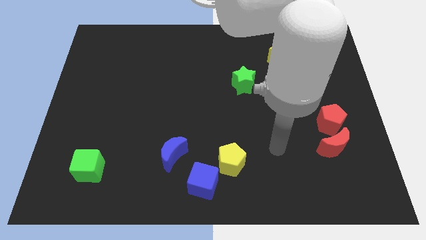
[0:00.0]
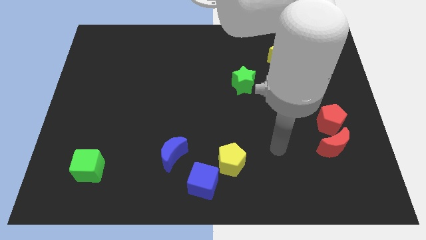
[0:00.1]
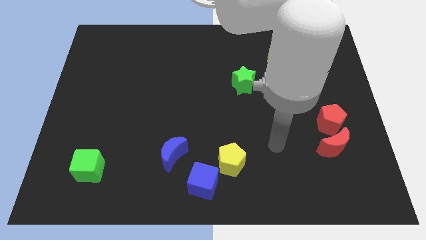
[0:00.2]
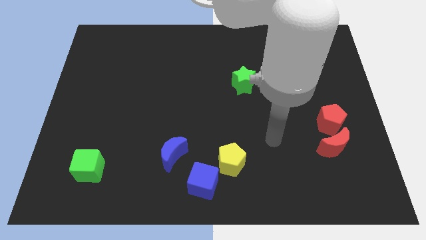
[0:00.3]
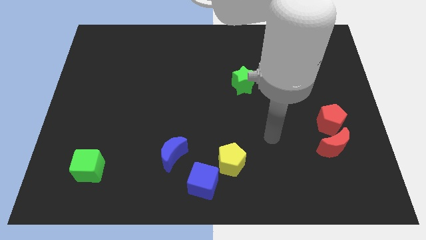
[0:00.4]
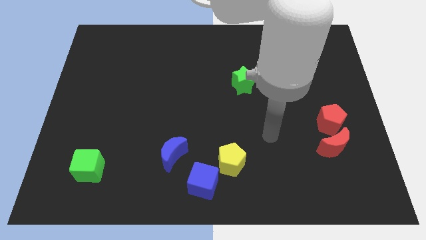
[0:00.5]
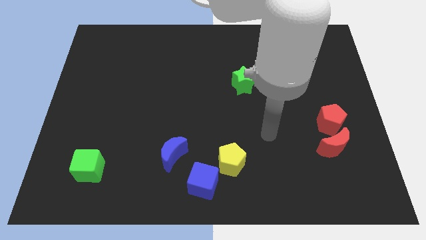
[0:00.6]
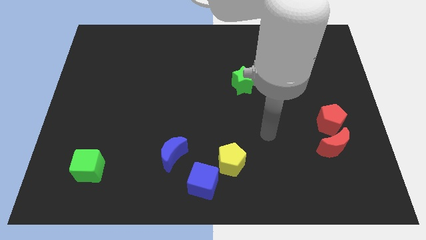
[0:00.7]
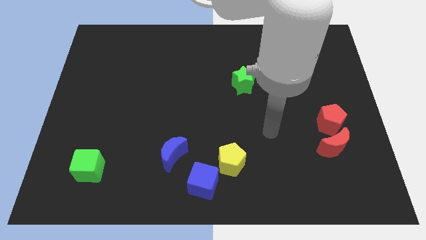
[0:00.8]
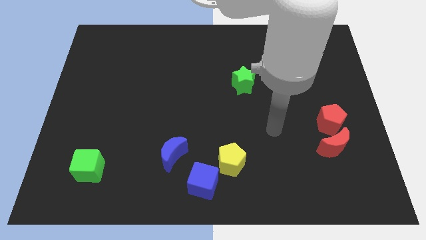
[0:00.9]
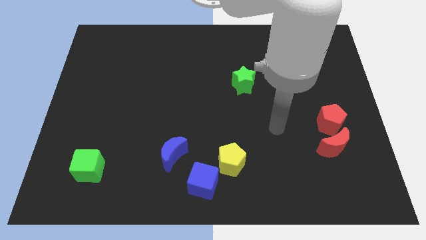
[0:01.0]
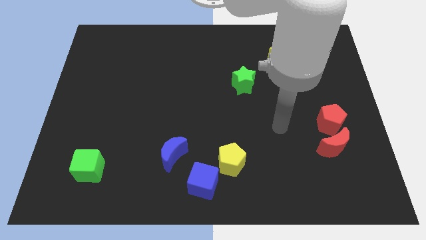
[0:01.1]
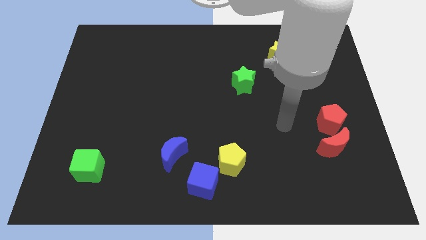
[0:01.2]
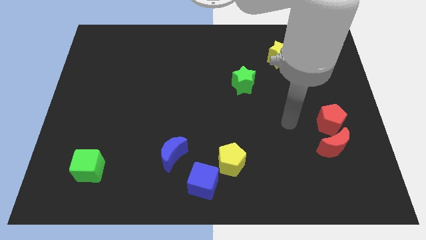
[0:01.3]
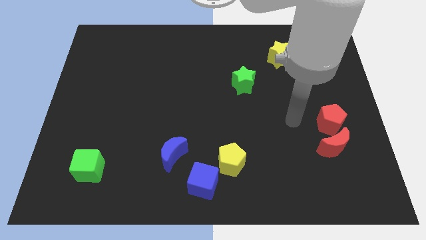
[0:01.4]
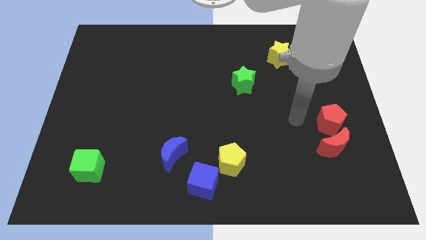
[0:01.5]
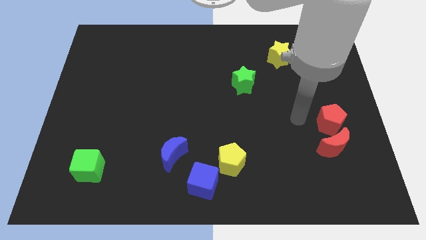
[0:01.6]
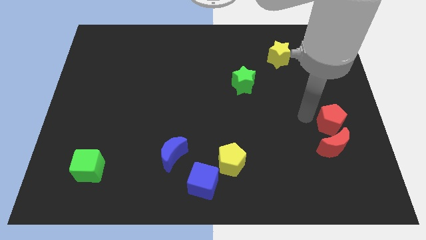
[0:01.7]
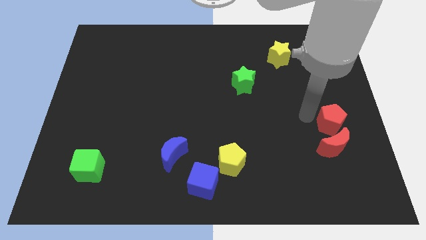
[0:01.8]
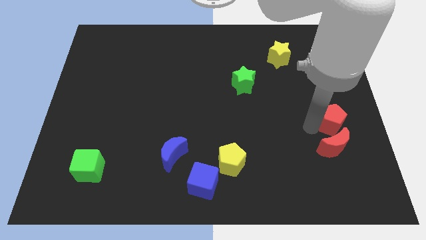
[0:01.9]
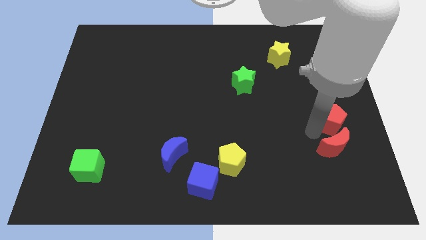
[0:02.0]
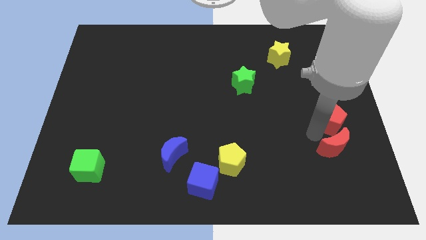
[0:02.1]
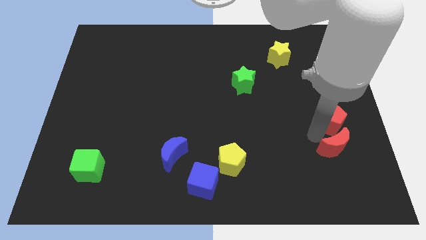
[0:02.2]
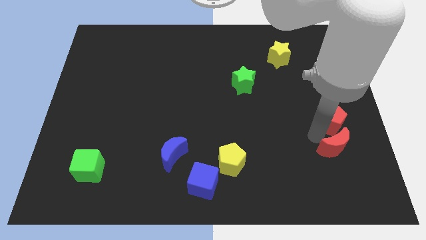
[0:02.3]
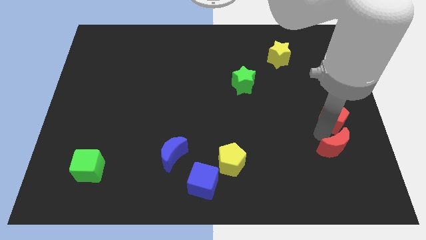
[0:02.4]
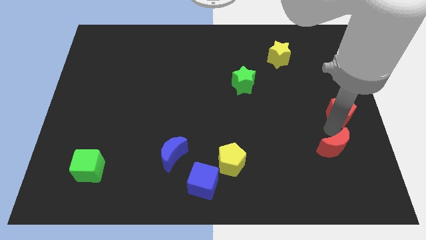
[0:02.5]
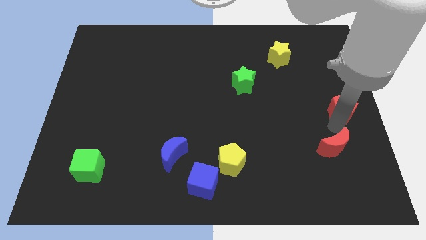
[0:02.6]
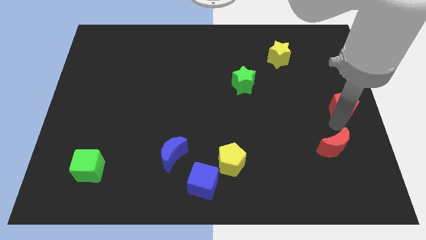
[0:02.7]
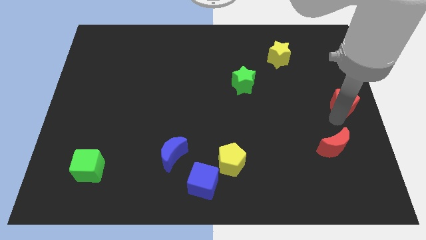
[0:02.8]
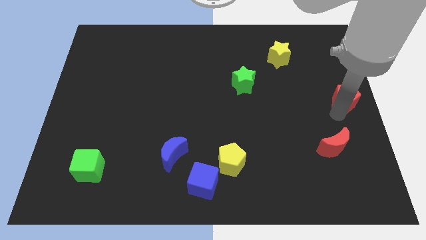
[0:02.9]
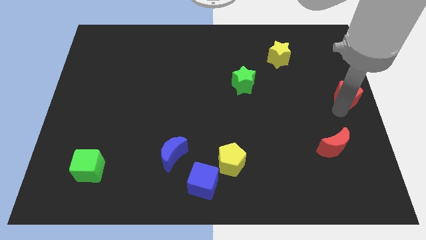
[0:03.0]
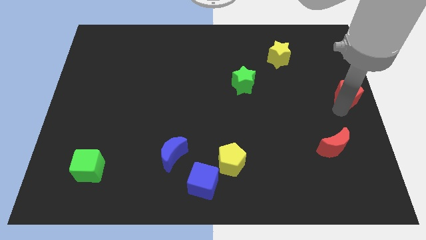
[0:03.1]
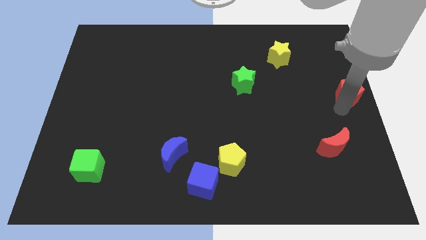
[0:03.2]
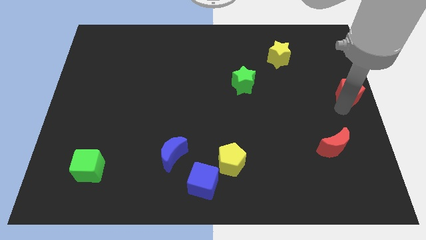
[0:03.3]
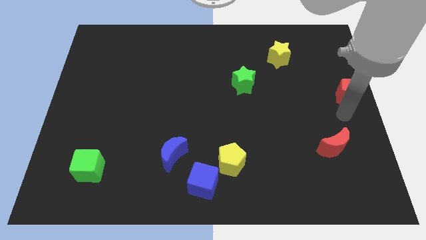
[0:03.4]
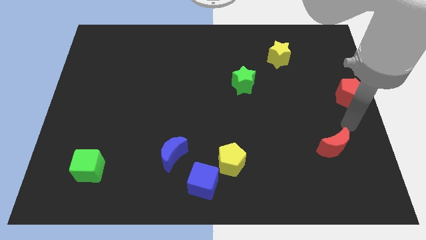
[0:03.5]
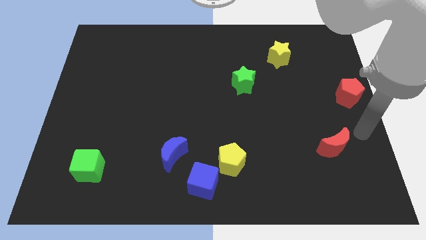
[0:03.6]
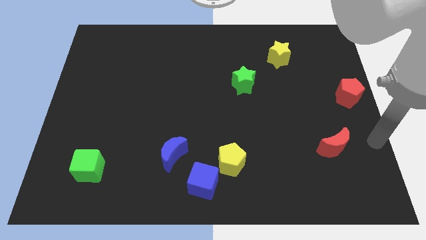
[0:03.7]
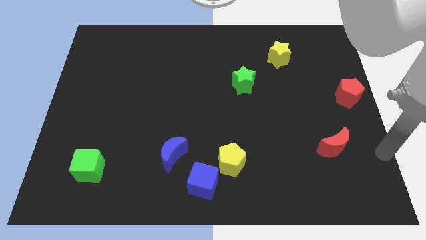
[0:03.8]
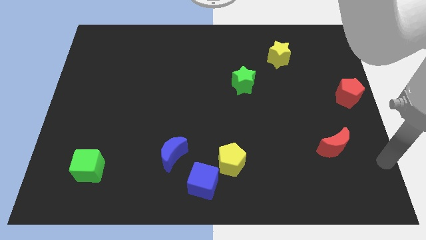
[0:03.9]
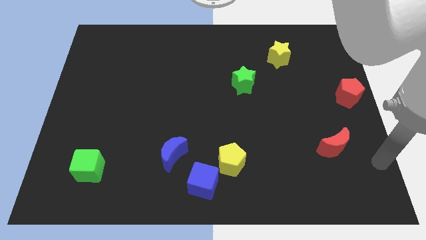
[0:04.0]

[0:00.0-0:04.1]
move the red pentagon to the middle right

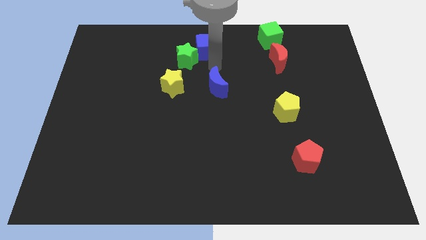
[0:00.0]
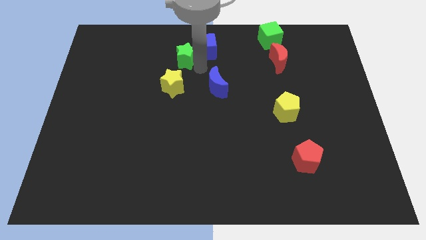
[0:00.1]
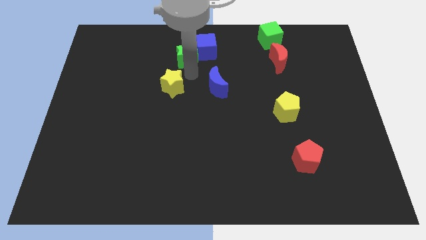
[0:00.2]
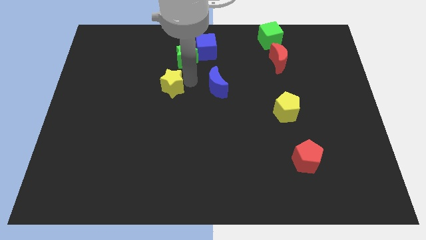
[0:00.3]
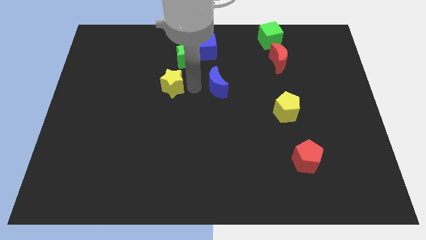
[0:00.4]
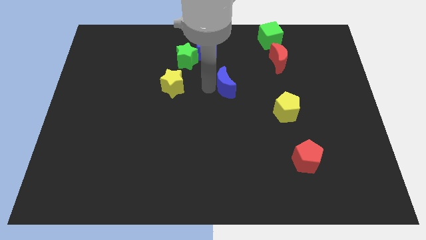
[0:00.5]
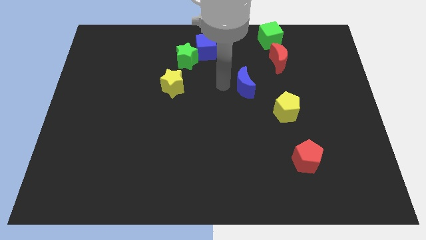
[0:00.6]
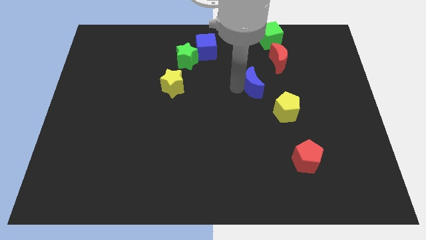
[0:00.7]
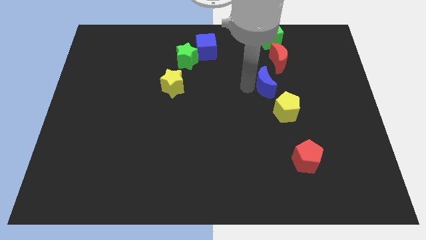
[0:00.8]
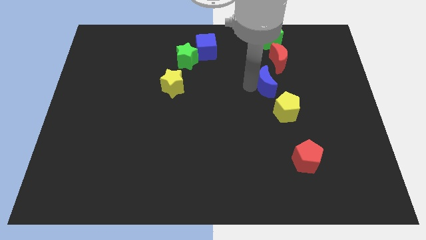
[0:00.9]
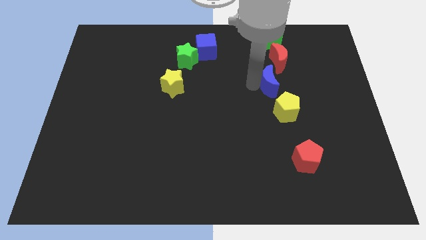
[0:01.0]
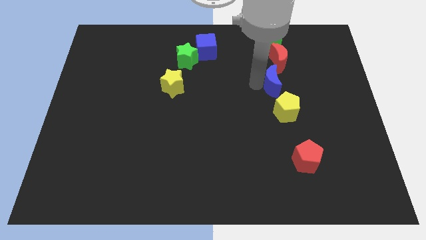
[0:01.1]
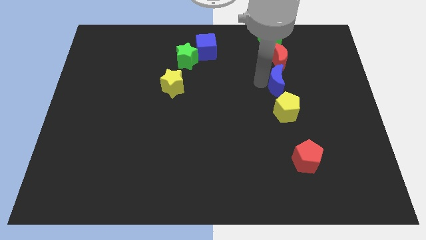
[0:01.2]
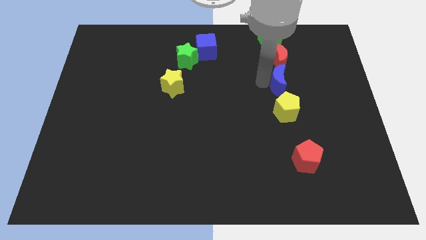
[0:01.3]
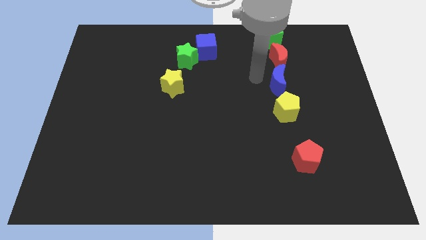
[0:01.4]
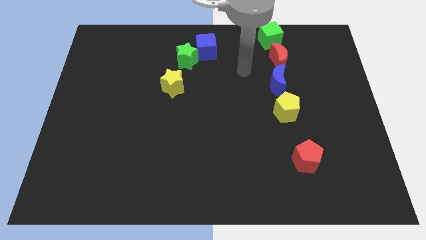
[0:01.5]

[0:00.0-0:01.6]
push the blue moon above the yellow pentagon

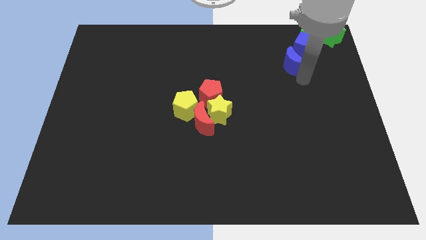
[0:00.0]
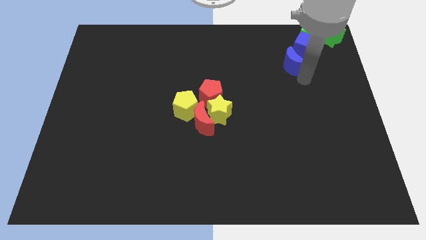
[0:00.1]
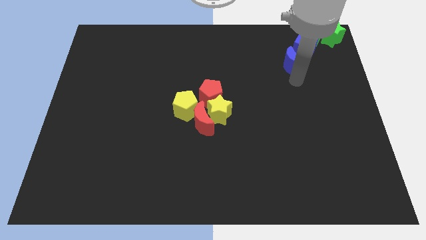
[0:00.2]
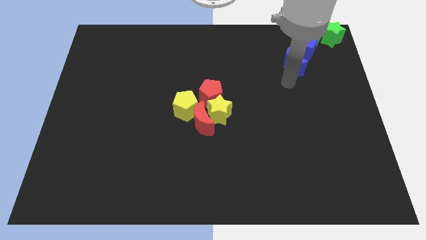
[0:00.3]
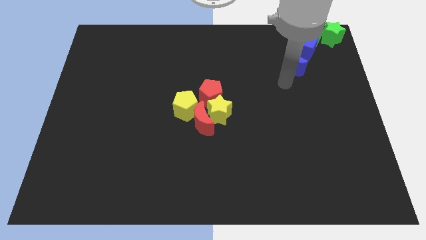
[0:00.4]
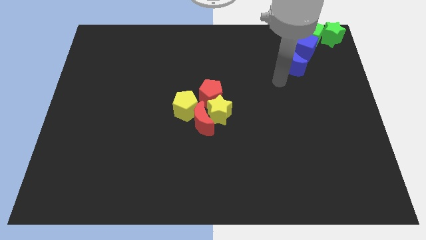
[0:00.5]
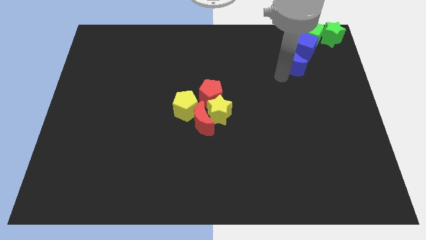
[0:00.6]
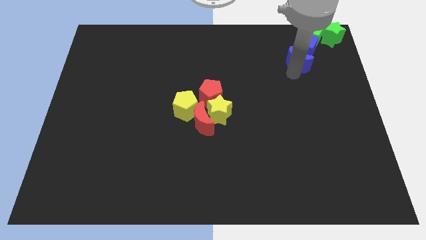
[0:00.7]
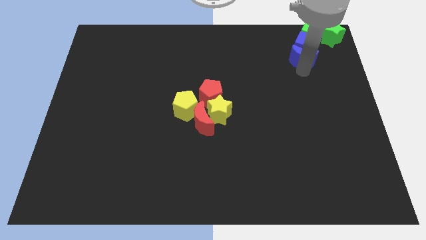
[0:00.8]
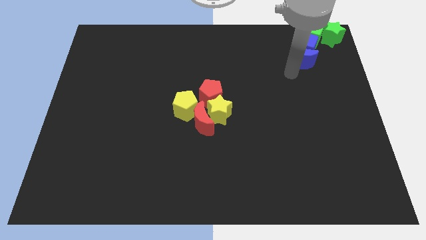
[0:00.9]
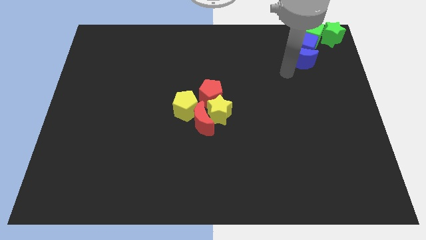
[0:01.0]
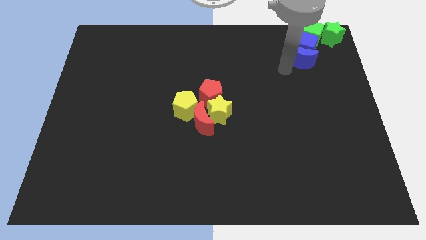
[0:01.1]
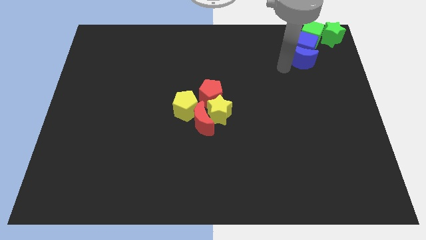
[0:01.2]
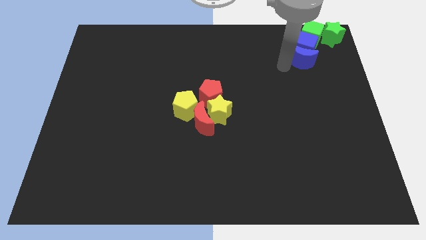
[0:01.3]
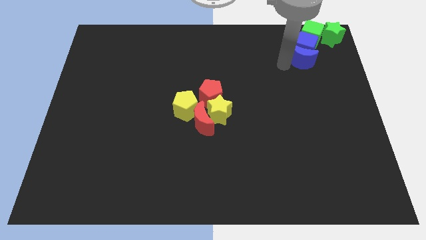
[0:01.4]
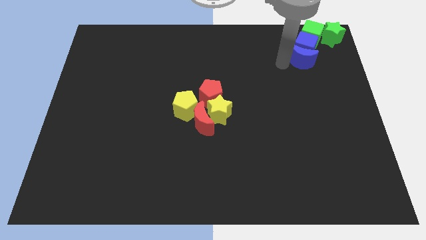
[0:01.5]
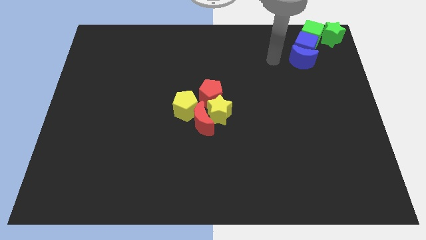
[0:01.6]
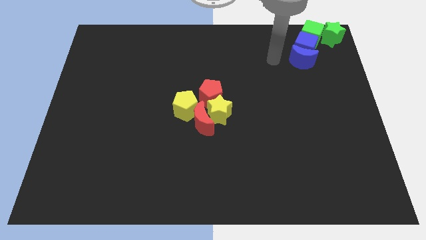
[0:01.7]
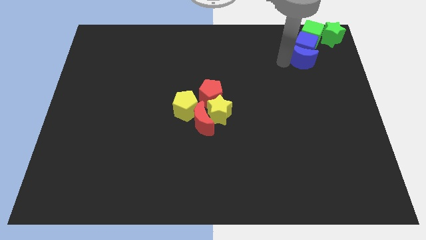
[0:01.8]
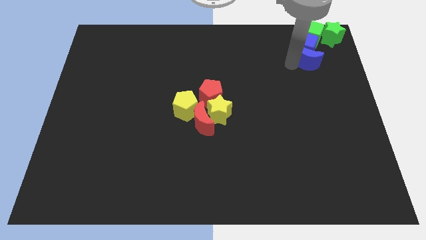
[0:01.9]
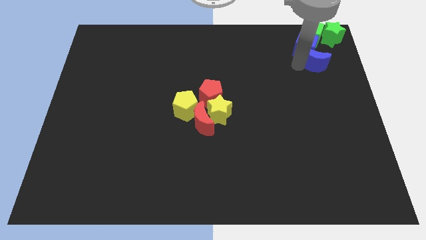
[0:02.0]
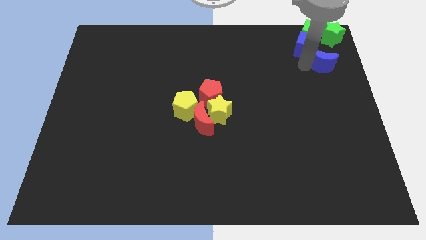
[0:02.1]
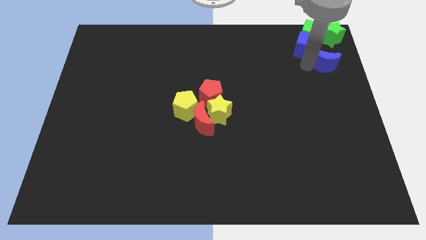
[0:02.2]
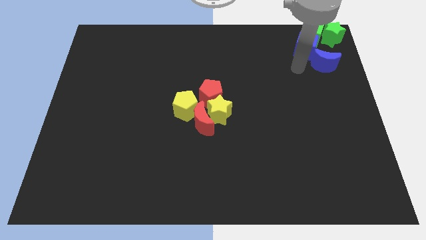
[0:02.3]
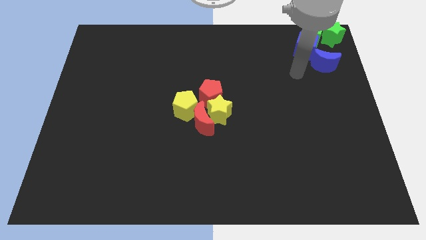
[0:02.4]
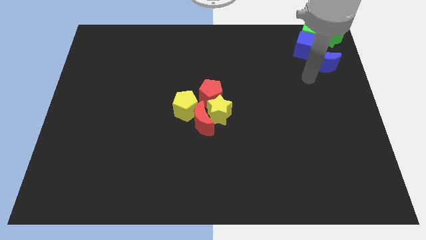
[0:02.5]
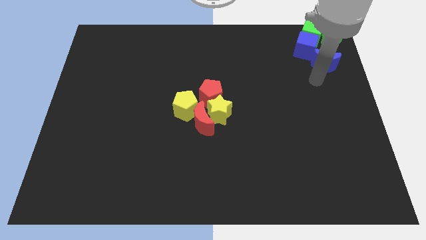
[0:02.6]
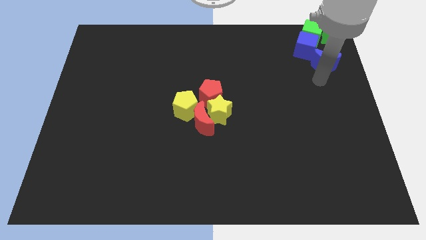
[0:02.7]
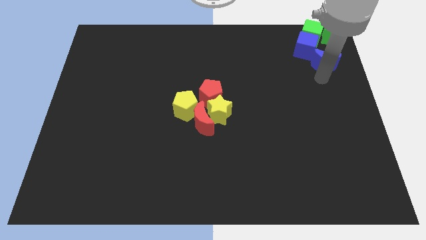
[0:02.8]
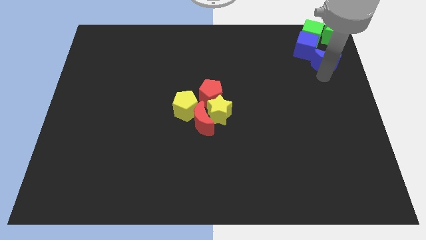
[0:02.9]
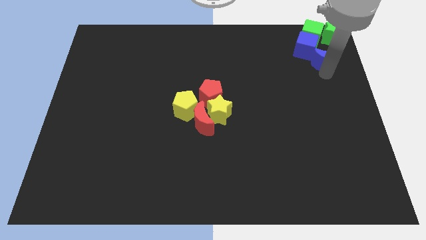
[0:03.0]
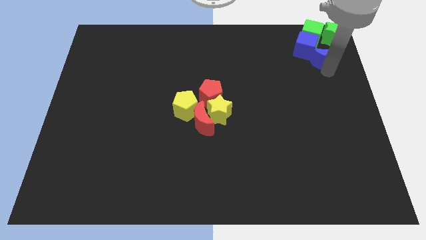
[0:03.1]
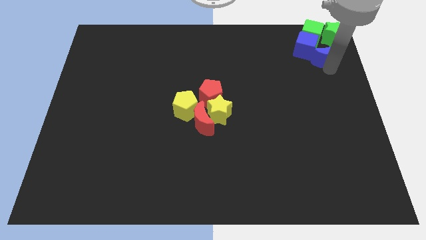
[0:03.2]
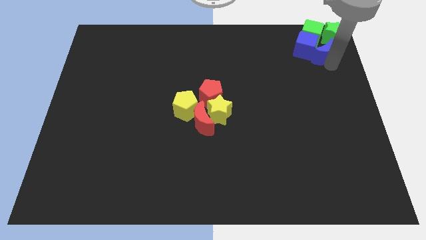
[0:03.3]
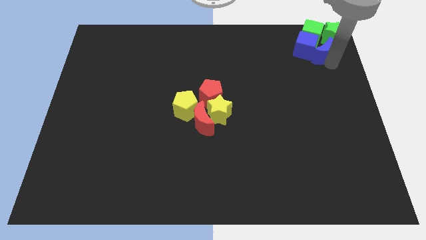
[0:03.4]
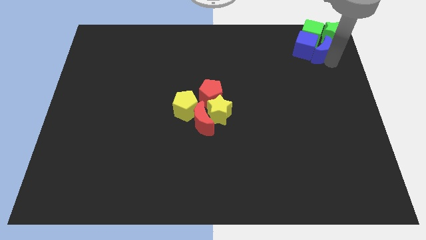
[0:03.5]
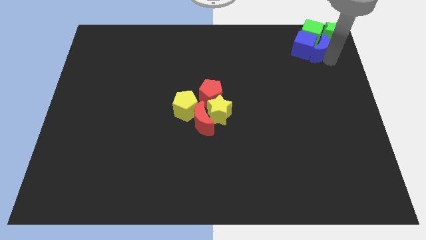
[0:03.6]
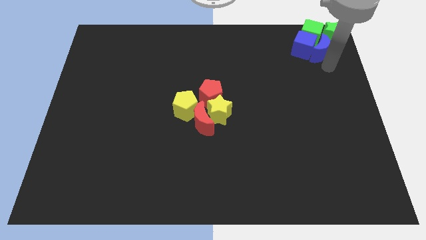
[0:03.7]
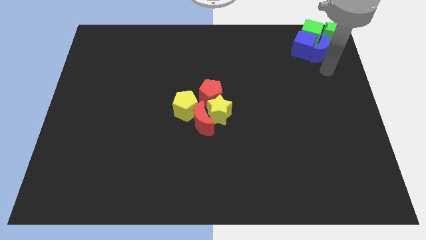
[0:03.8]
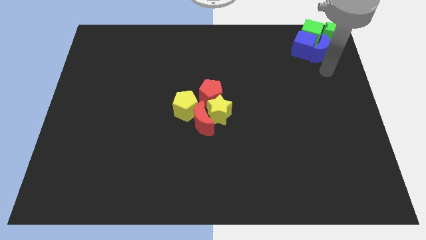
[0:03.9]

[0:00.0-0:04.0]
make a group of blue blocks and green blocks
